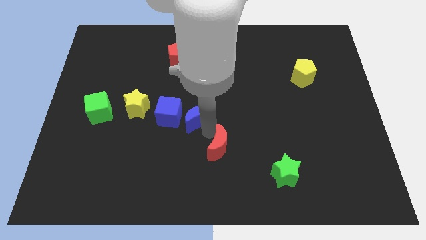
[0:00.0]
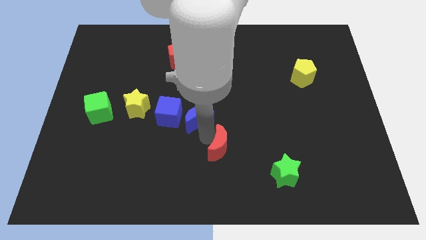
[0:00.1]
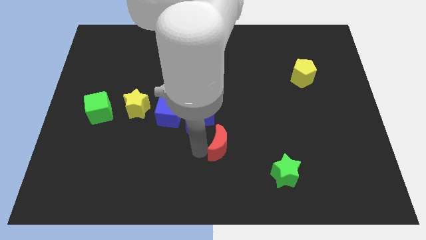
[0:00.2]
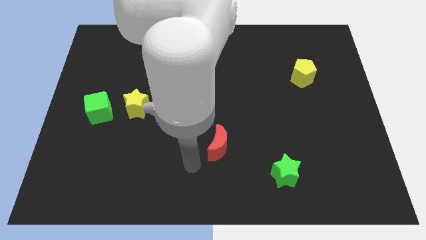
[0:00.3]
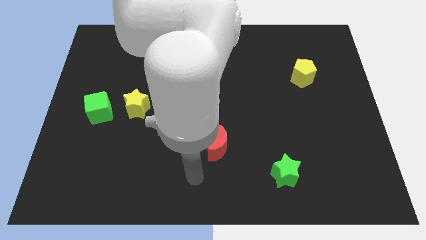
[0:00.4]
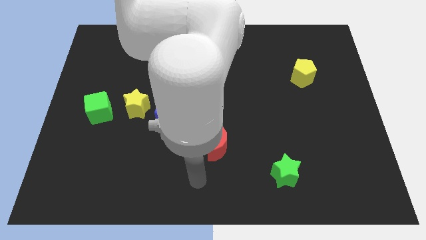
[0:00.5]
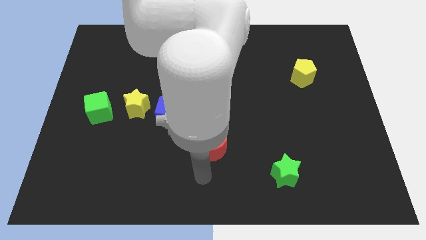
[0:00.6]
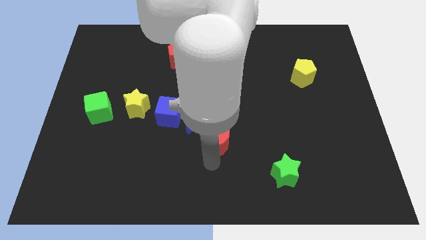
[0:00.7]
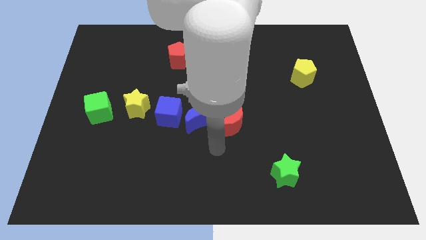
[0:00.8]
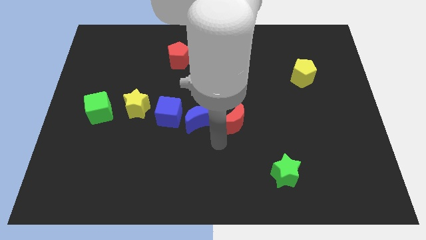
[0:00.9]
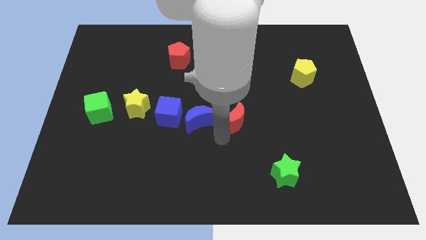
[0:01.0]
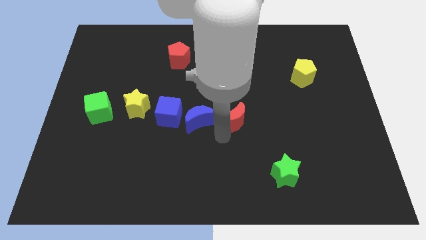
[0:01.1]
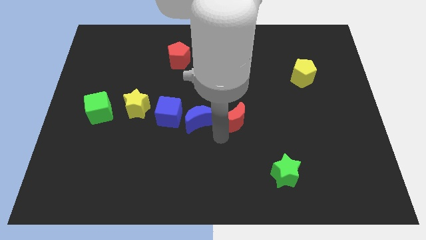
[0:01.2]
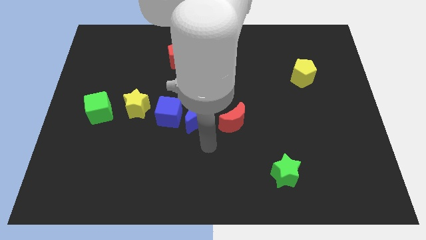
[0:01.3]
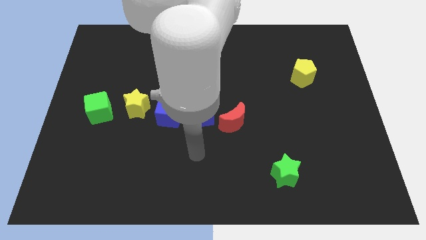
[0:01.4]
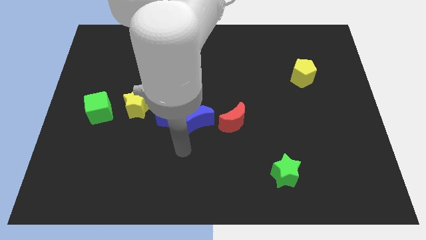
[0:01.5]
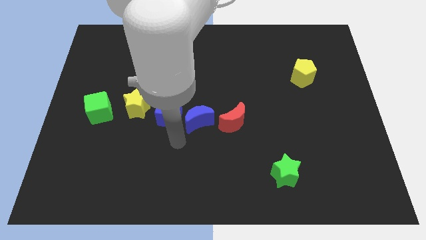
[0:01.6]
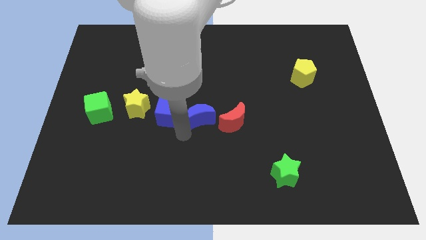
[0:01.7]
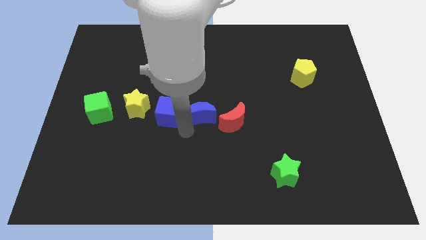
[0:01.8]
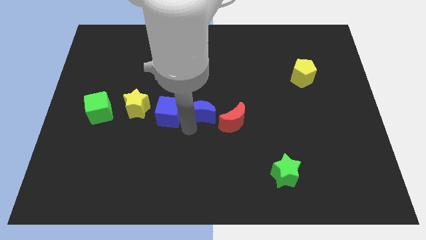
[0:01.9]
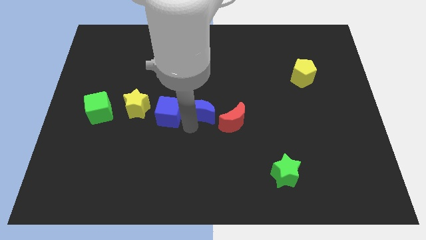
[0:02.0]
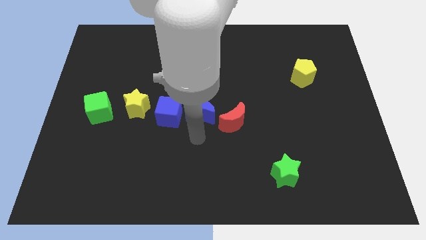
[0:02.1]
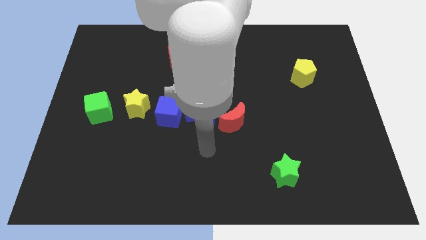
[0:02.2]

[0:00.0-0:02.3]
push the red crescent to right of blue crescent

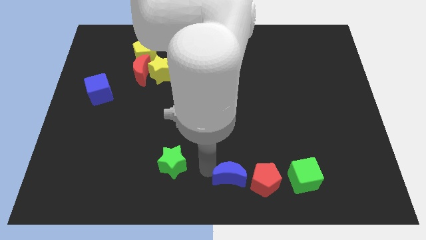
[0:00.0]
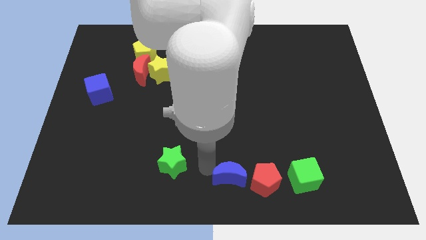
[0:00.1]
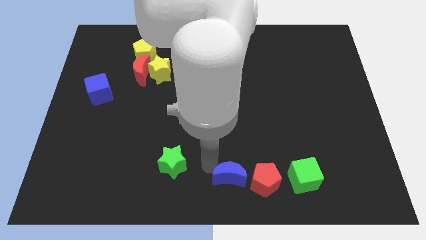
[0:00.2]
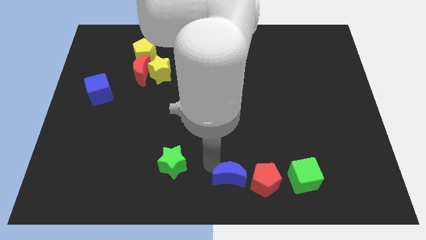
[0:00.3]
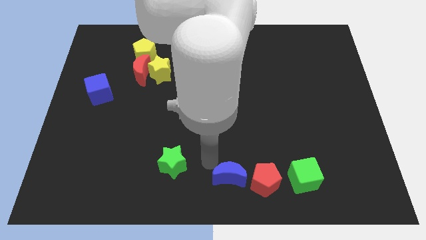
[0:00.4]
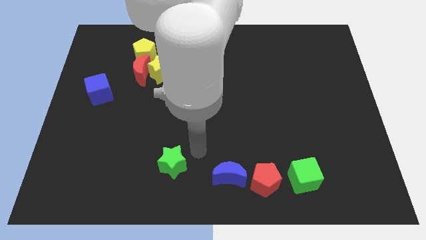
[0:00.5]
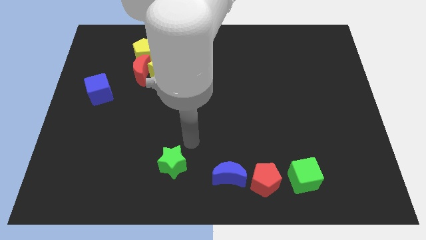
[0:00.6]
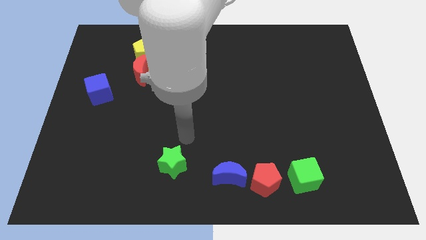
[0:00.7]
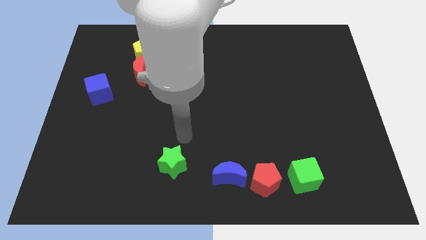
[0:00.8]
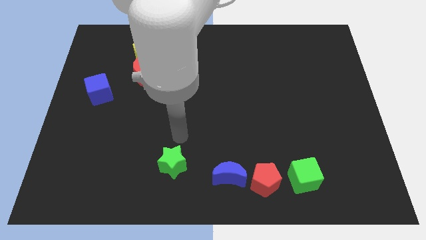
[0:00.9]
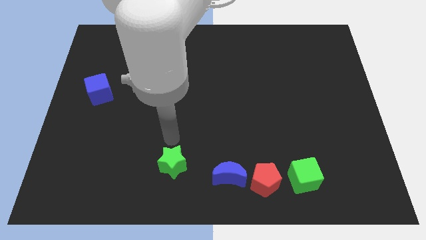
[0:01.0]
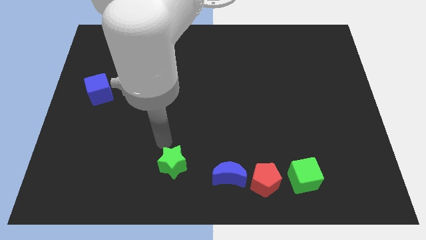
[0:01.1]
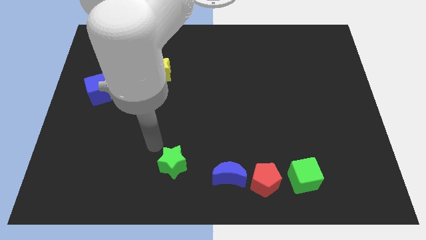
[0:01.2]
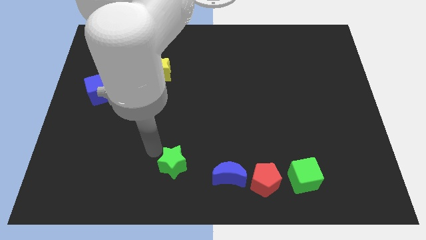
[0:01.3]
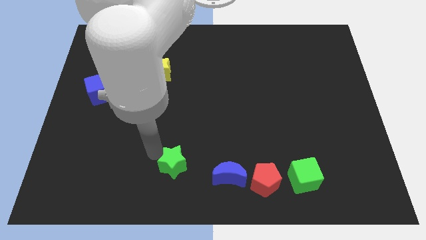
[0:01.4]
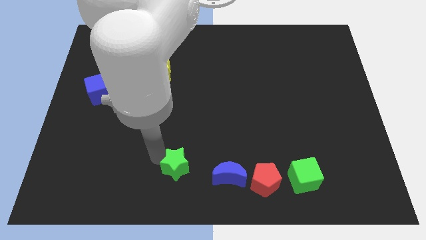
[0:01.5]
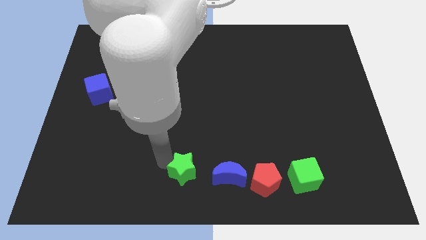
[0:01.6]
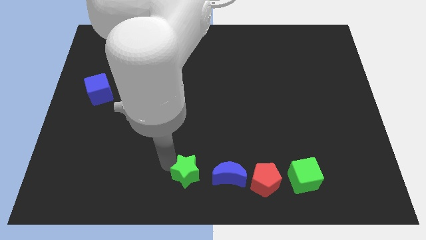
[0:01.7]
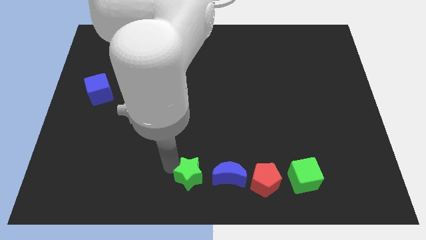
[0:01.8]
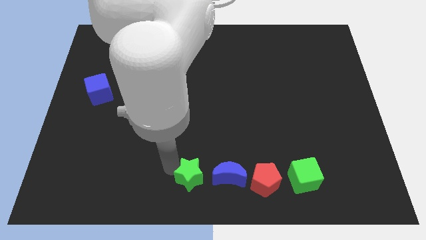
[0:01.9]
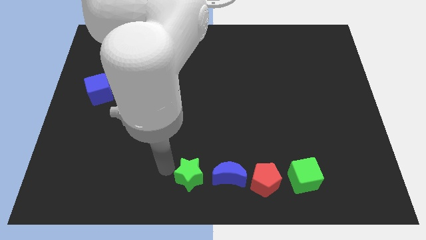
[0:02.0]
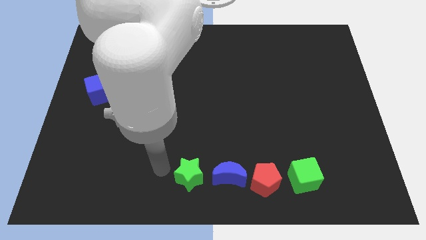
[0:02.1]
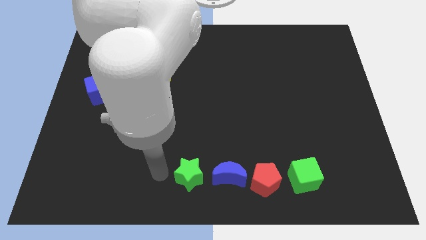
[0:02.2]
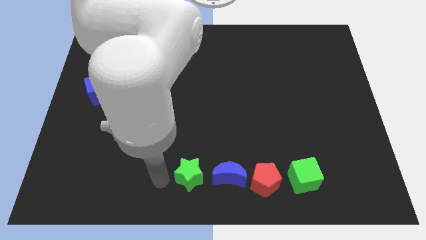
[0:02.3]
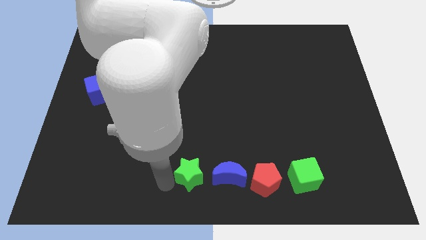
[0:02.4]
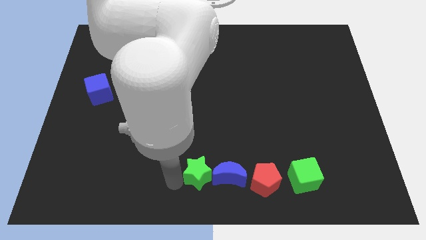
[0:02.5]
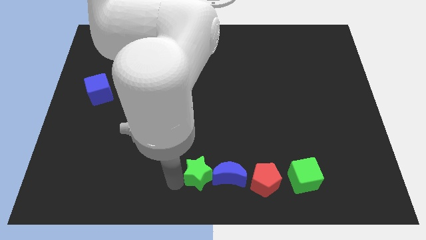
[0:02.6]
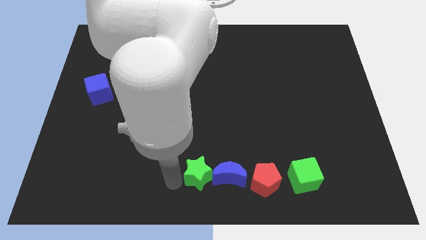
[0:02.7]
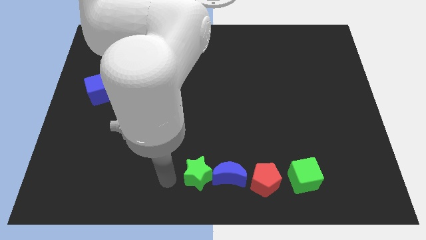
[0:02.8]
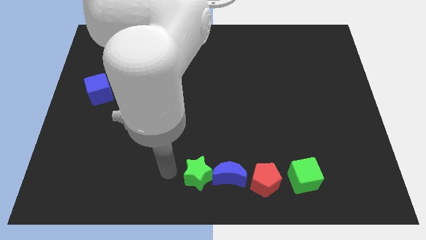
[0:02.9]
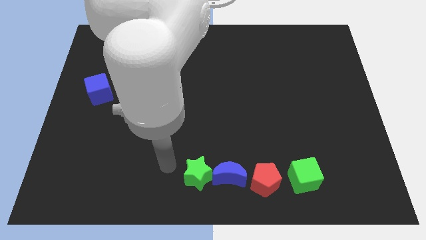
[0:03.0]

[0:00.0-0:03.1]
bring the green star at the left side of the blue moon

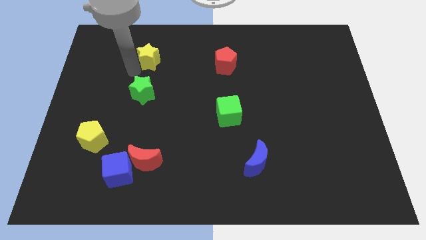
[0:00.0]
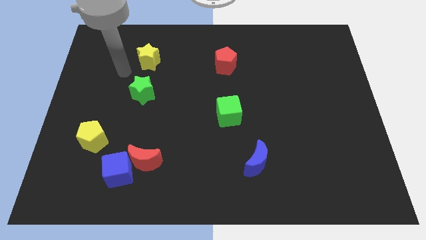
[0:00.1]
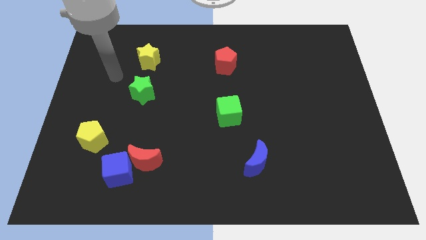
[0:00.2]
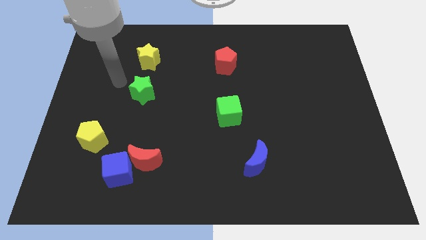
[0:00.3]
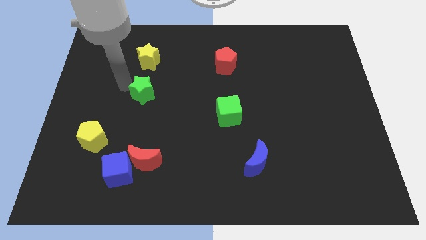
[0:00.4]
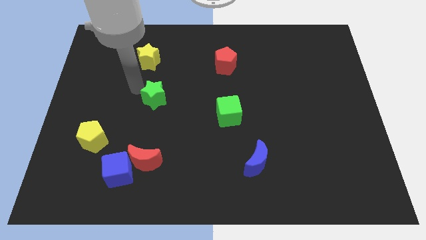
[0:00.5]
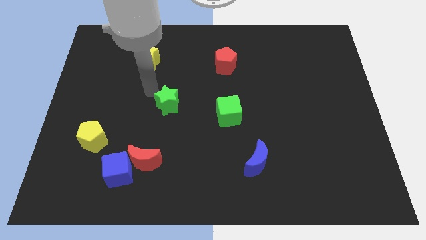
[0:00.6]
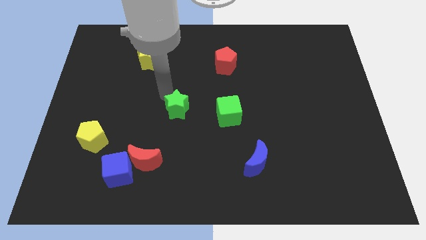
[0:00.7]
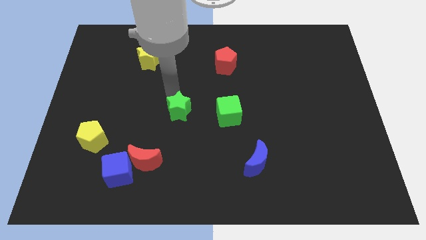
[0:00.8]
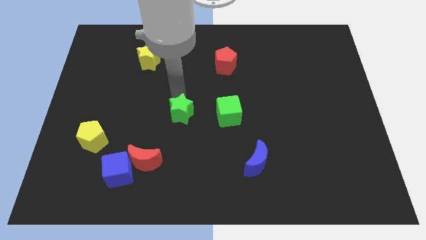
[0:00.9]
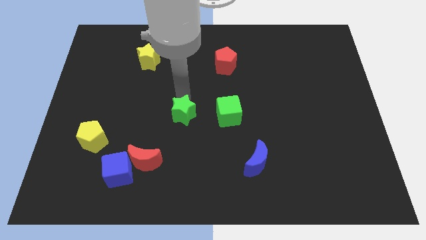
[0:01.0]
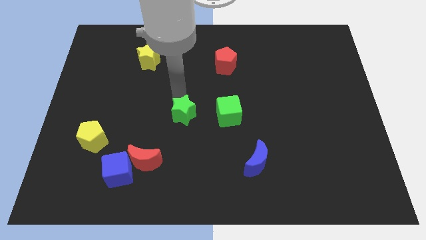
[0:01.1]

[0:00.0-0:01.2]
drag green star towards the green cube

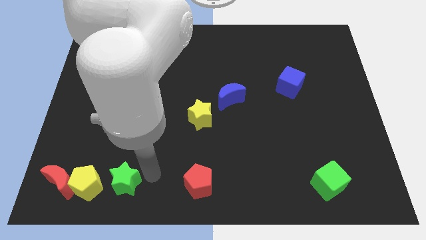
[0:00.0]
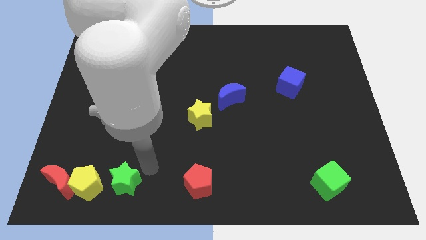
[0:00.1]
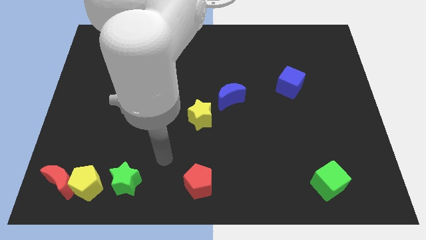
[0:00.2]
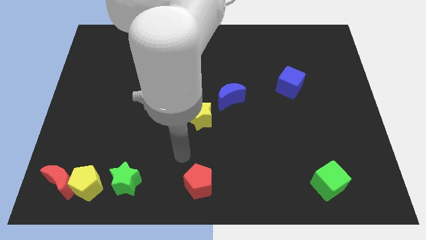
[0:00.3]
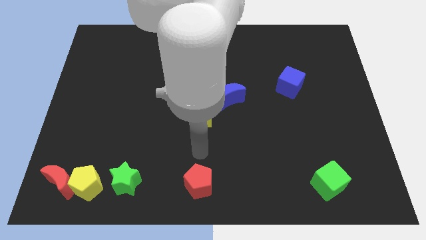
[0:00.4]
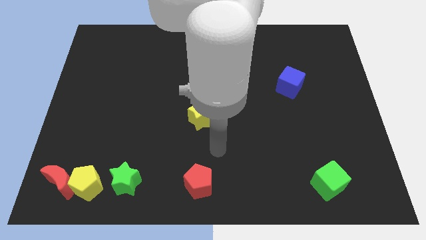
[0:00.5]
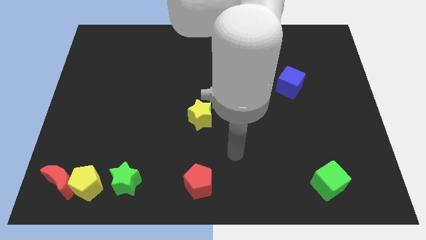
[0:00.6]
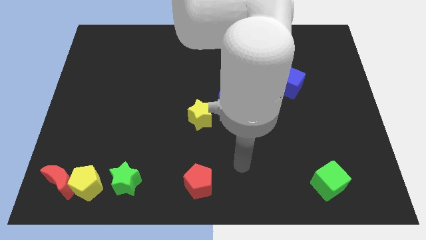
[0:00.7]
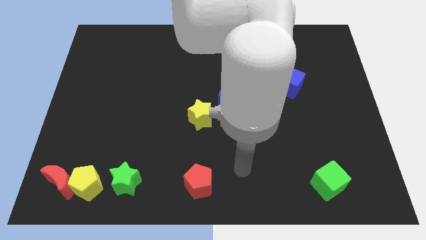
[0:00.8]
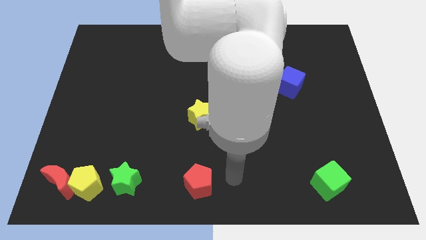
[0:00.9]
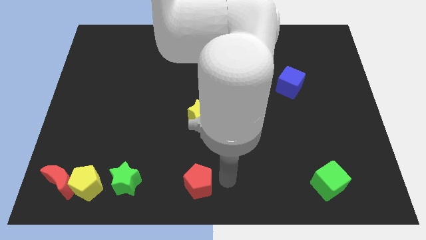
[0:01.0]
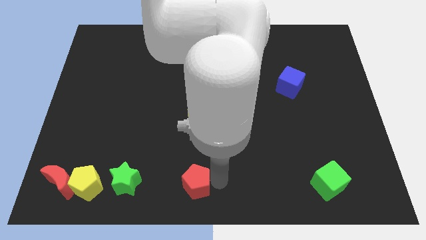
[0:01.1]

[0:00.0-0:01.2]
move your arm to the right of the red pentagon

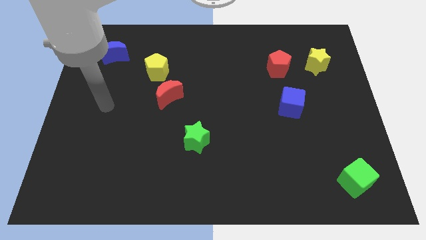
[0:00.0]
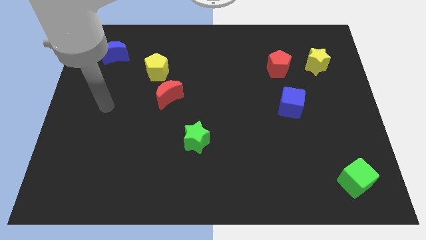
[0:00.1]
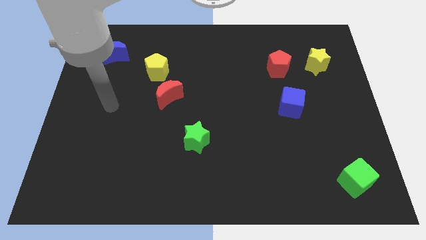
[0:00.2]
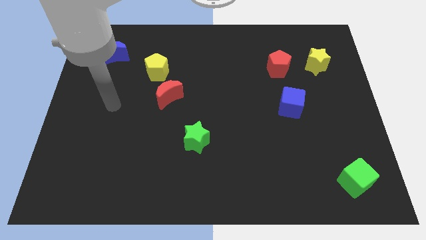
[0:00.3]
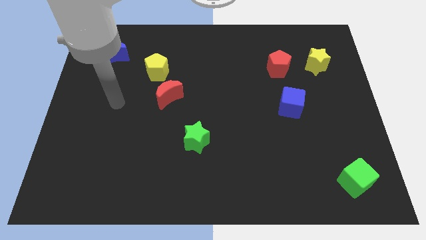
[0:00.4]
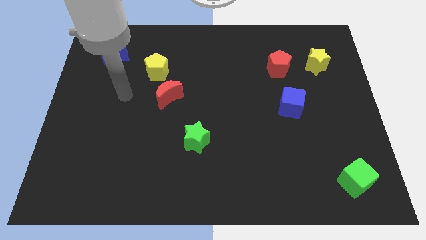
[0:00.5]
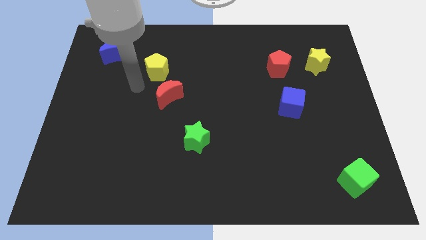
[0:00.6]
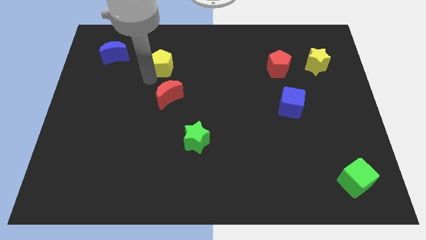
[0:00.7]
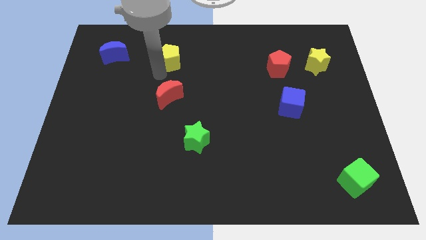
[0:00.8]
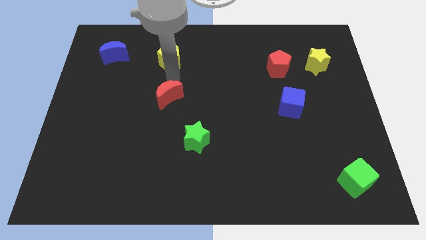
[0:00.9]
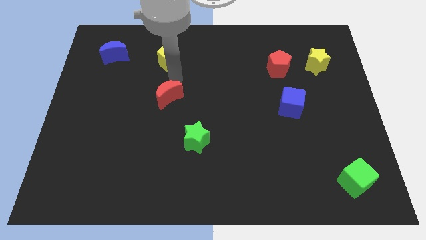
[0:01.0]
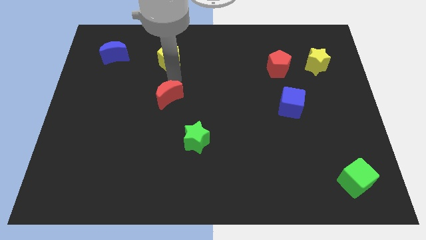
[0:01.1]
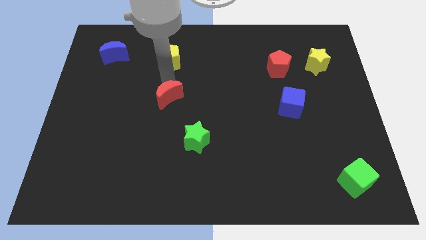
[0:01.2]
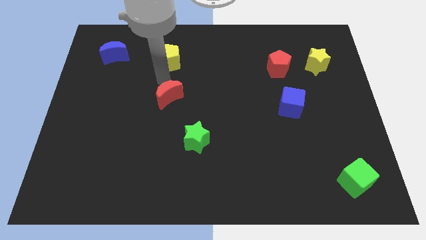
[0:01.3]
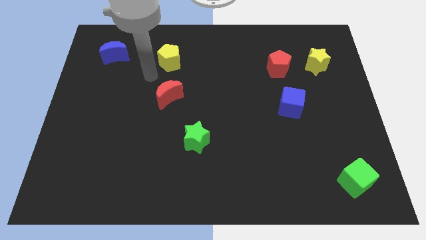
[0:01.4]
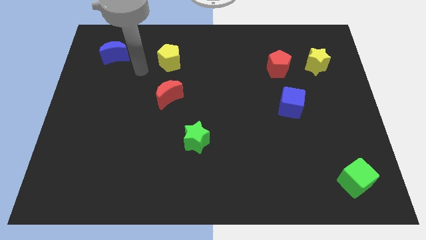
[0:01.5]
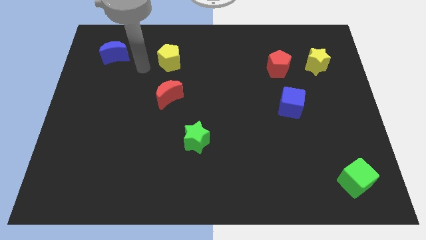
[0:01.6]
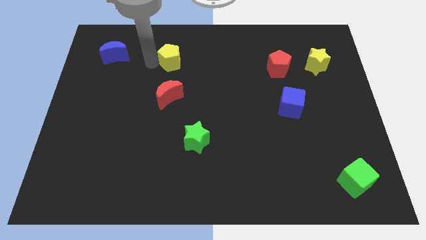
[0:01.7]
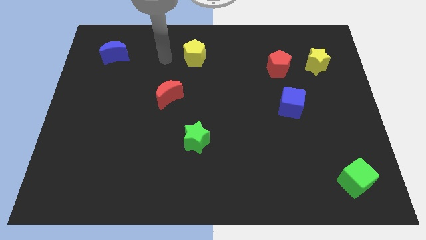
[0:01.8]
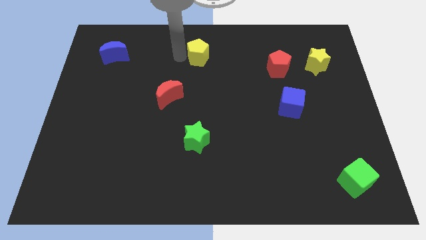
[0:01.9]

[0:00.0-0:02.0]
move the yellow pentagon towards top center of the board
